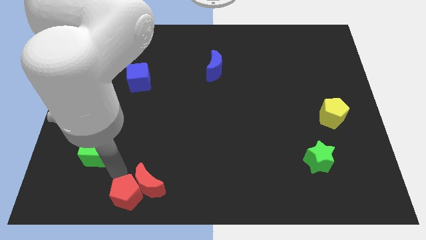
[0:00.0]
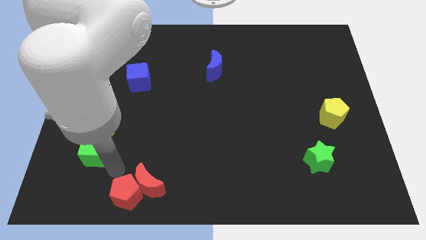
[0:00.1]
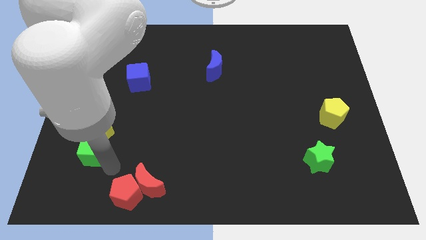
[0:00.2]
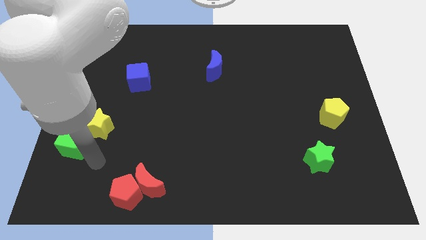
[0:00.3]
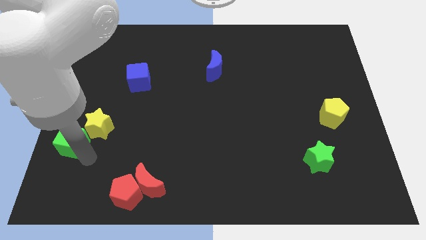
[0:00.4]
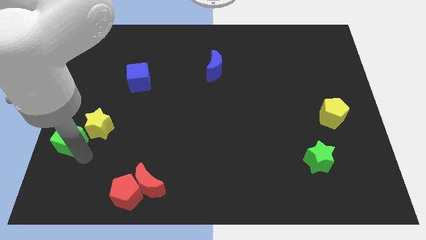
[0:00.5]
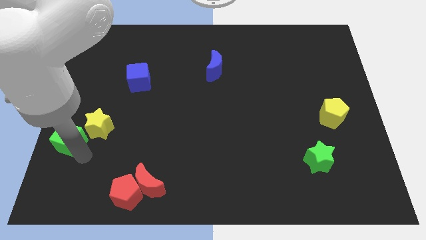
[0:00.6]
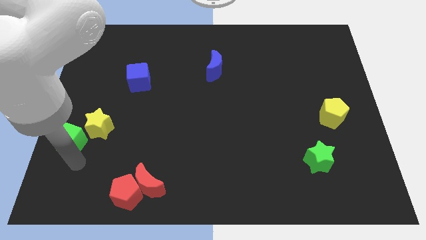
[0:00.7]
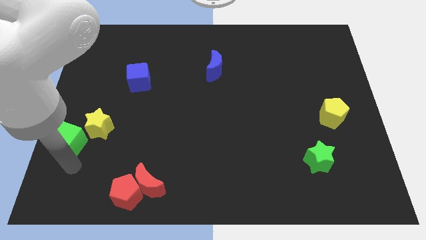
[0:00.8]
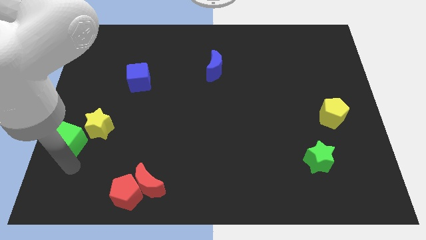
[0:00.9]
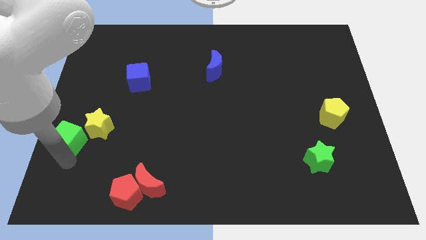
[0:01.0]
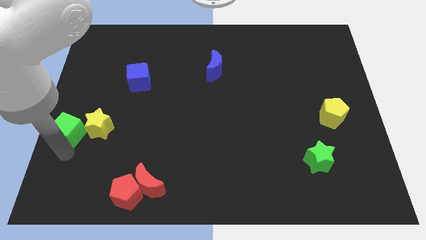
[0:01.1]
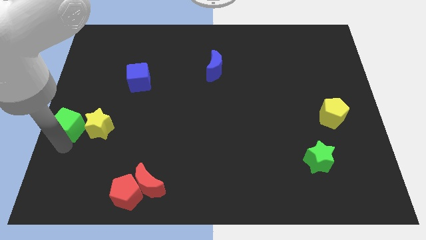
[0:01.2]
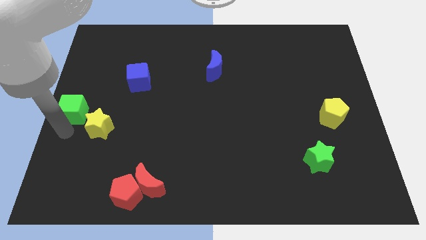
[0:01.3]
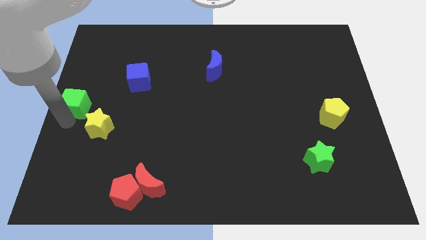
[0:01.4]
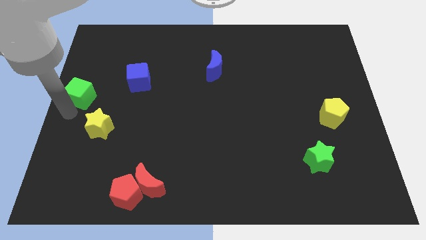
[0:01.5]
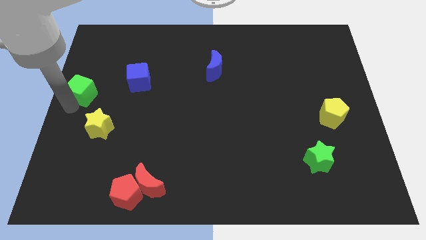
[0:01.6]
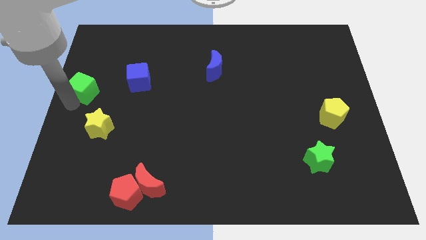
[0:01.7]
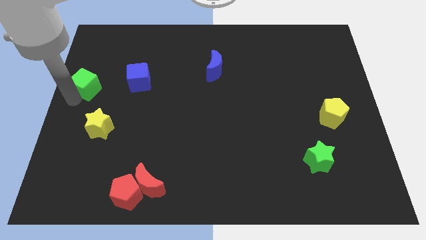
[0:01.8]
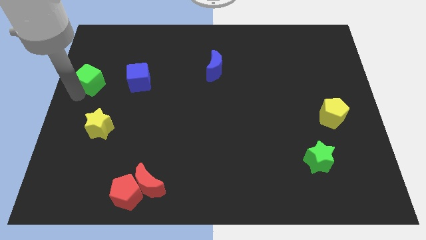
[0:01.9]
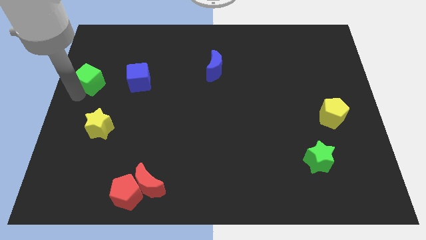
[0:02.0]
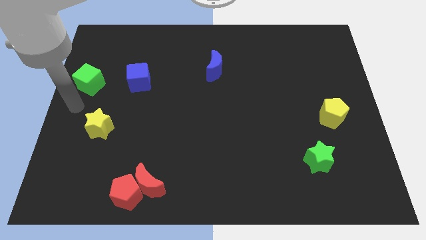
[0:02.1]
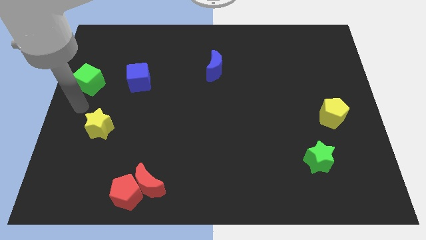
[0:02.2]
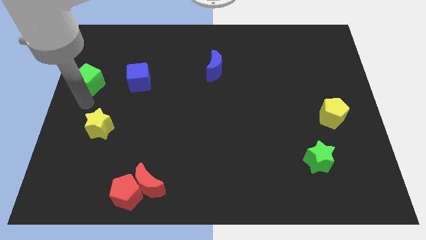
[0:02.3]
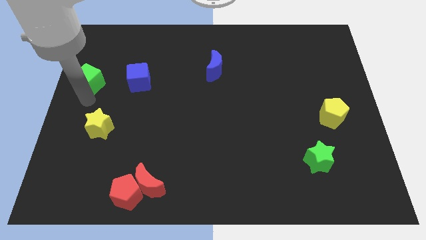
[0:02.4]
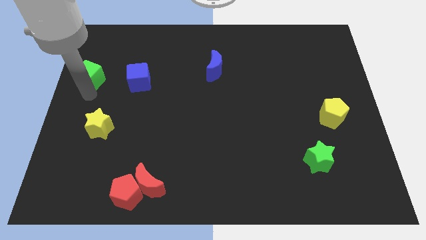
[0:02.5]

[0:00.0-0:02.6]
place green cube parallel left to blue cube

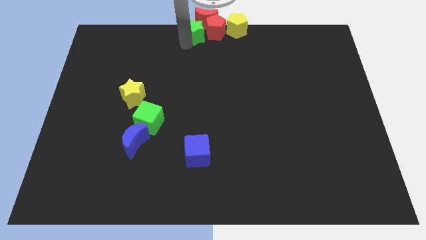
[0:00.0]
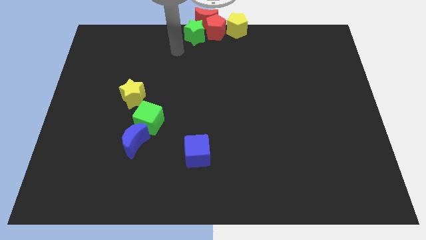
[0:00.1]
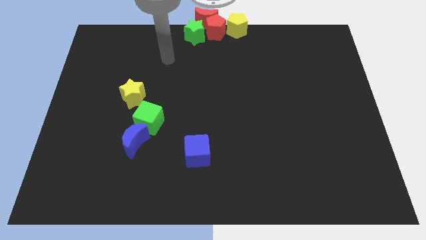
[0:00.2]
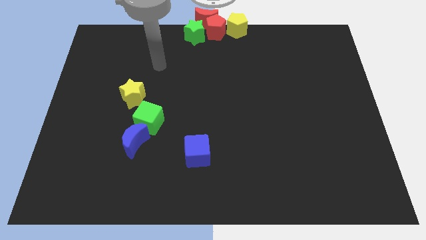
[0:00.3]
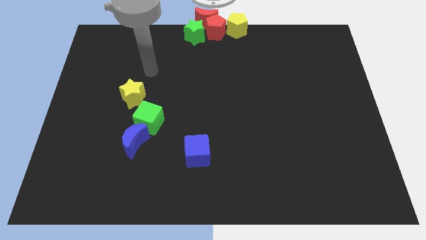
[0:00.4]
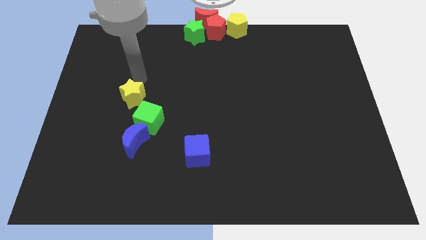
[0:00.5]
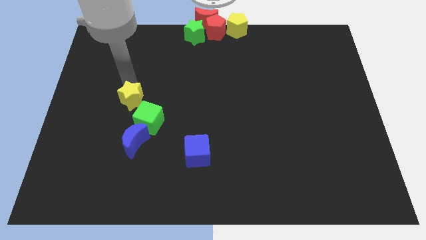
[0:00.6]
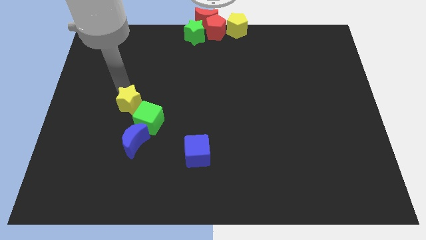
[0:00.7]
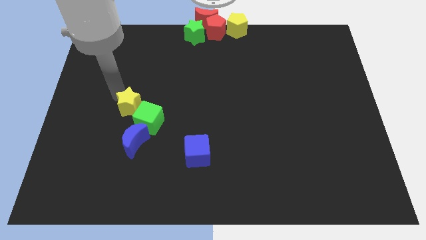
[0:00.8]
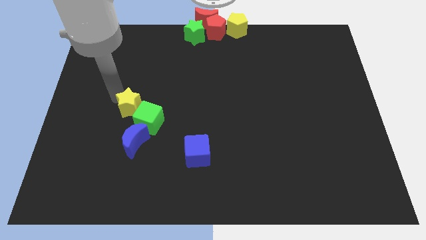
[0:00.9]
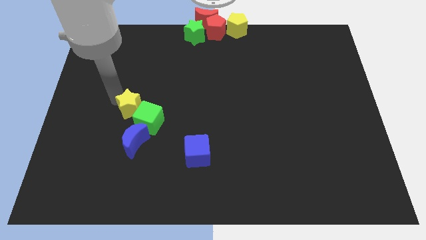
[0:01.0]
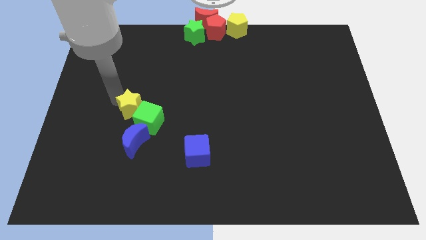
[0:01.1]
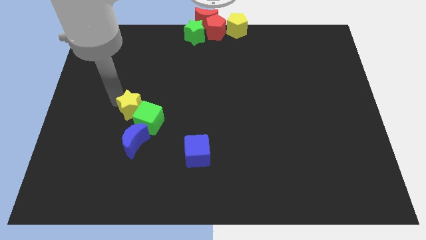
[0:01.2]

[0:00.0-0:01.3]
move yellow star slightly down

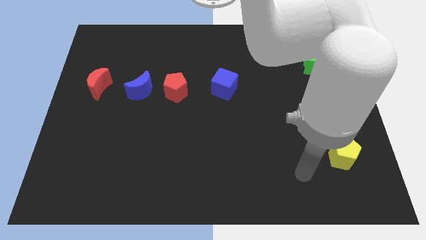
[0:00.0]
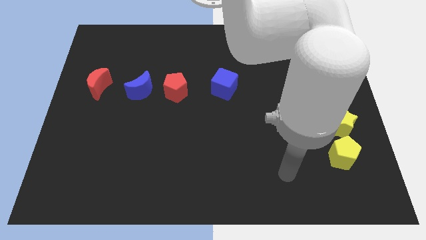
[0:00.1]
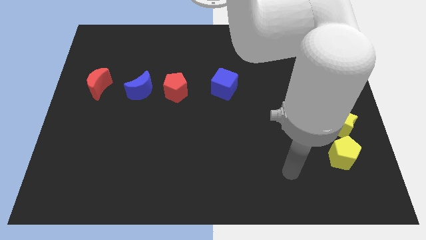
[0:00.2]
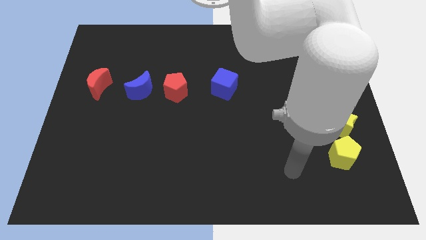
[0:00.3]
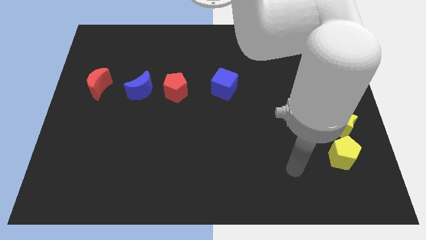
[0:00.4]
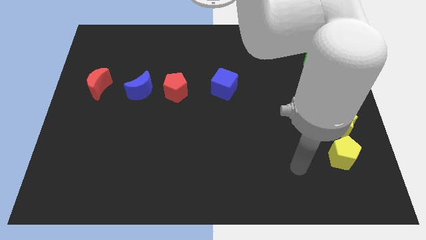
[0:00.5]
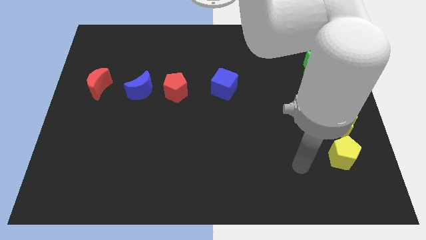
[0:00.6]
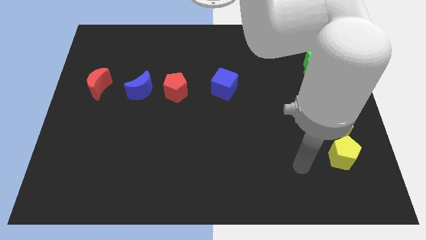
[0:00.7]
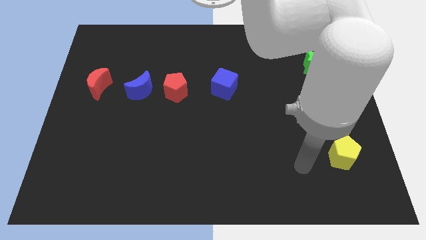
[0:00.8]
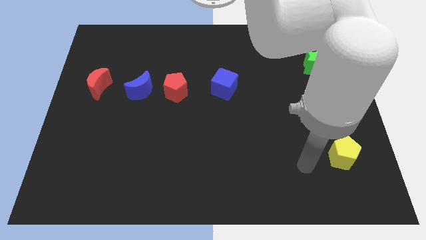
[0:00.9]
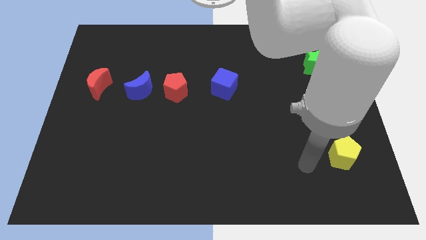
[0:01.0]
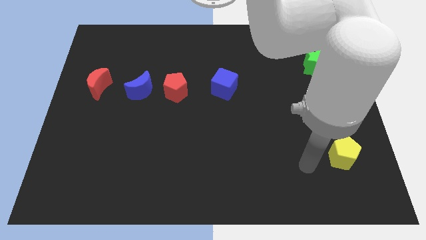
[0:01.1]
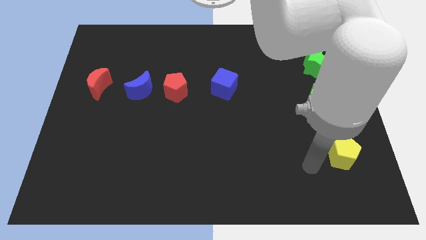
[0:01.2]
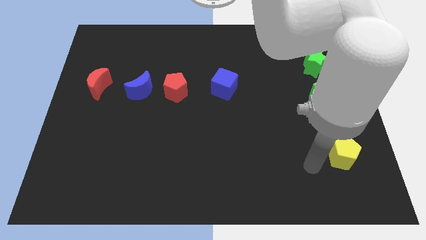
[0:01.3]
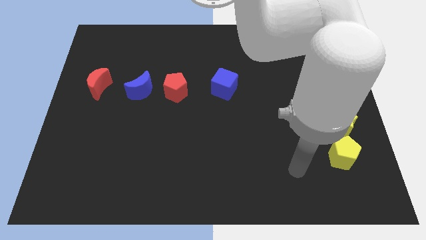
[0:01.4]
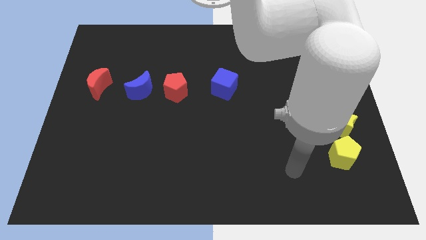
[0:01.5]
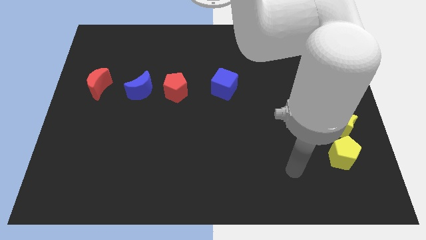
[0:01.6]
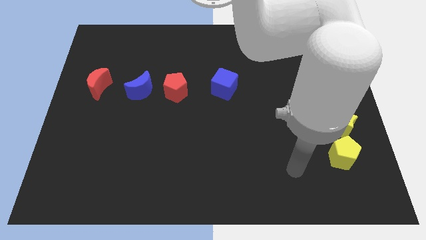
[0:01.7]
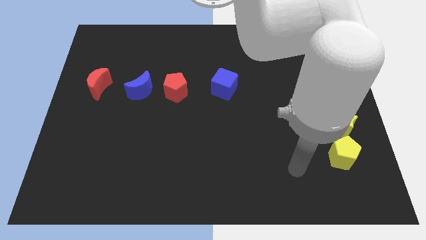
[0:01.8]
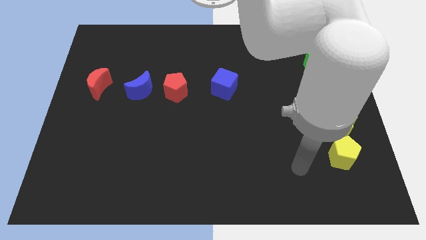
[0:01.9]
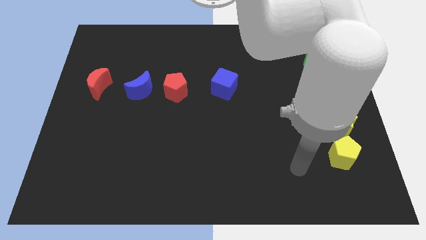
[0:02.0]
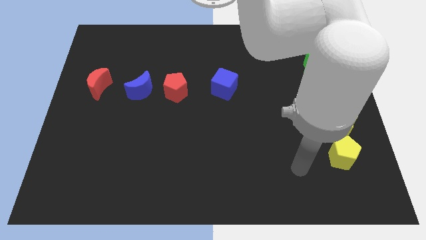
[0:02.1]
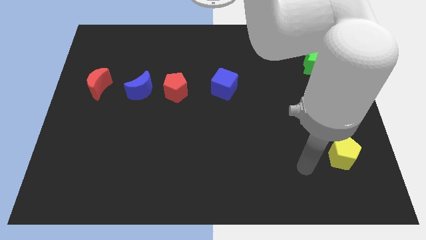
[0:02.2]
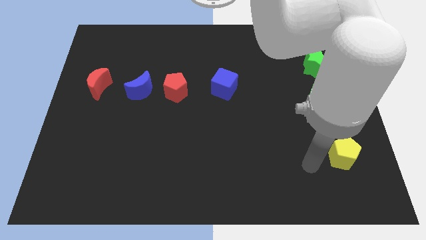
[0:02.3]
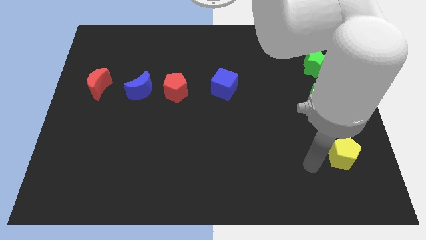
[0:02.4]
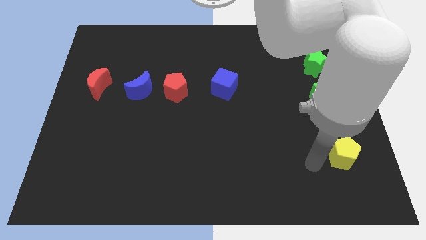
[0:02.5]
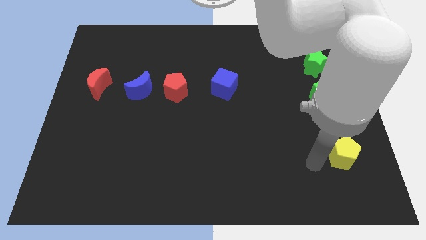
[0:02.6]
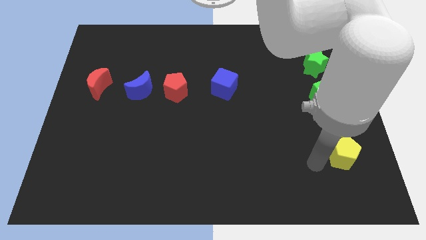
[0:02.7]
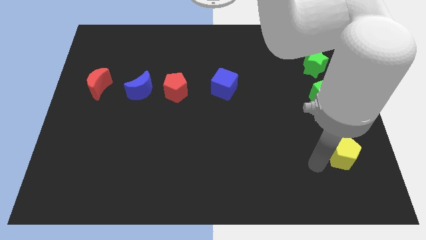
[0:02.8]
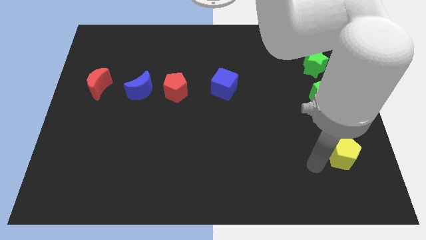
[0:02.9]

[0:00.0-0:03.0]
place your arm to the left of the yellow pentagon

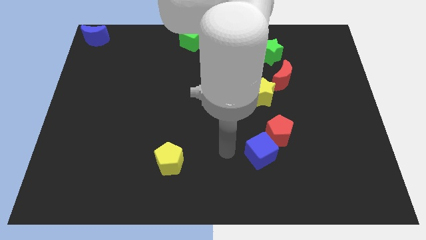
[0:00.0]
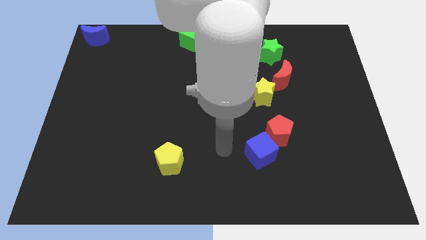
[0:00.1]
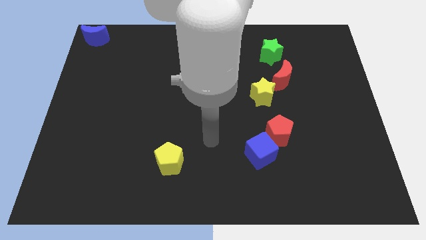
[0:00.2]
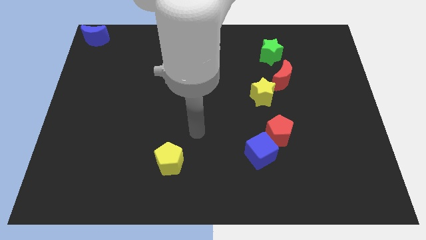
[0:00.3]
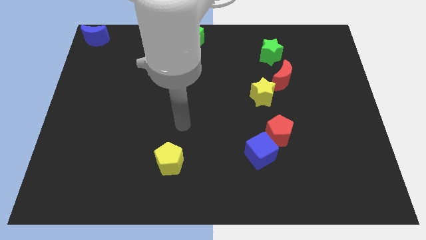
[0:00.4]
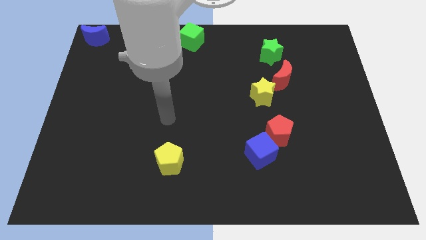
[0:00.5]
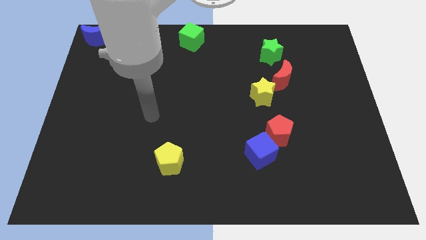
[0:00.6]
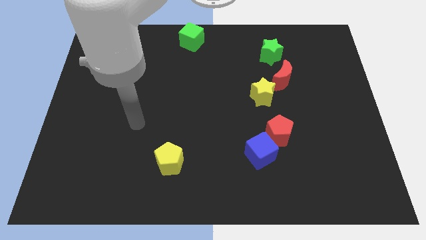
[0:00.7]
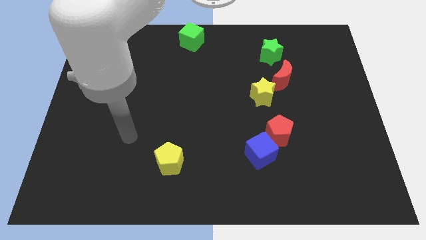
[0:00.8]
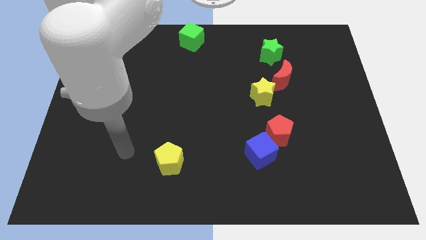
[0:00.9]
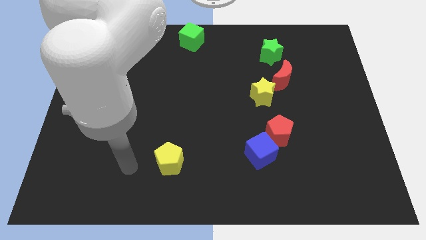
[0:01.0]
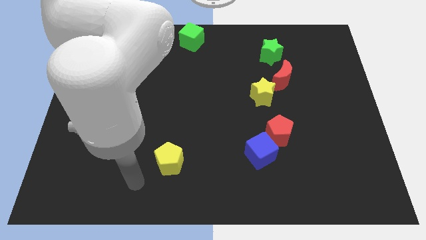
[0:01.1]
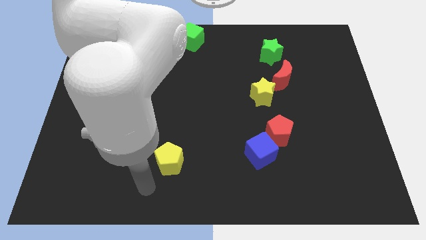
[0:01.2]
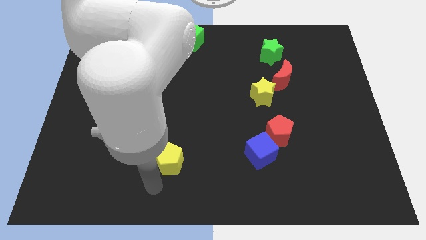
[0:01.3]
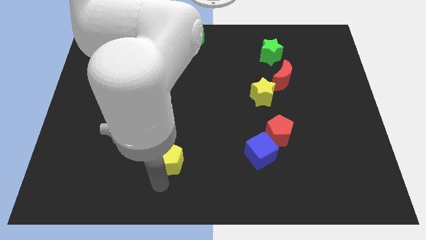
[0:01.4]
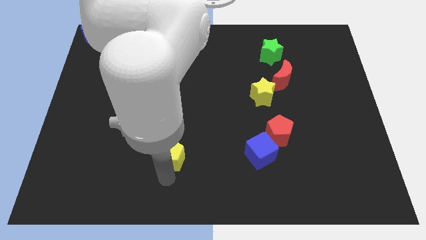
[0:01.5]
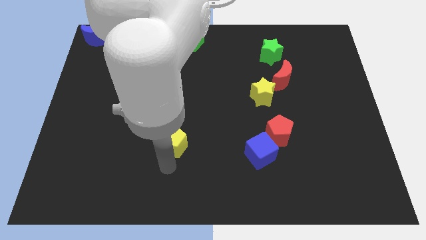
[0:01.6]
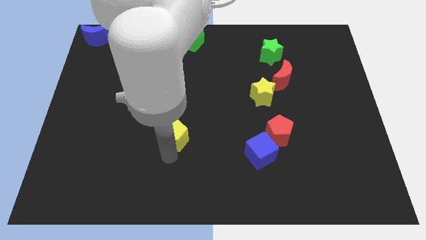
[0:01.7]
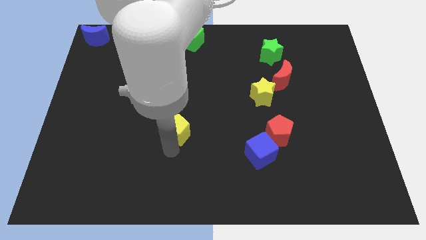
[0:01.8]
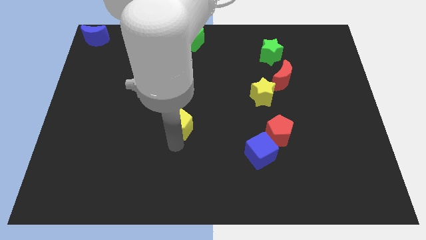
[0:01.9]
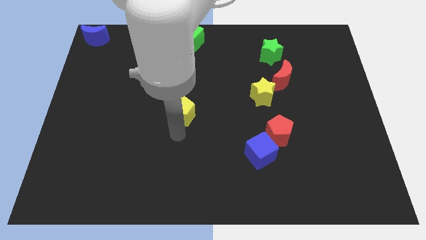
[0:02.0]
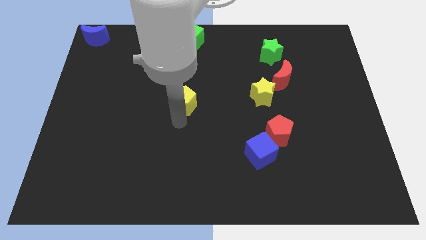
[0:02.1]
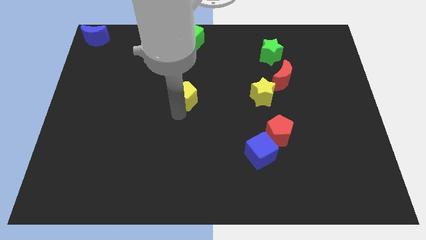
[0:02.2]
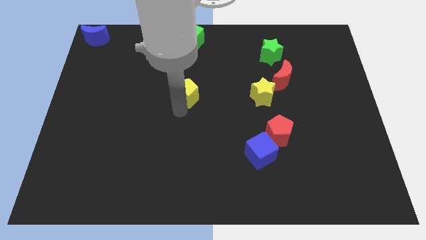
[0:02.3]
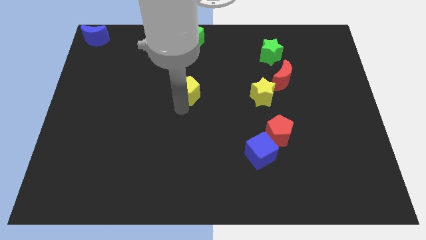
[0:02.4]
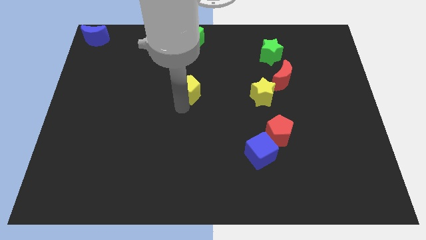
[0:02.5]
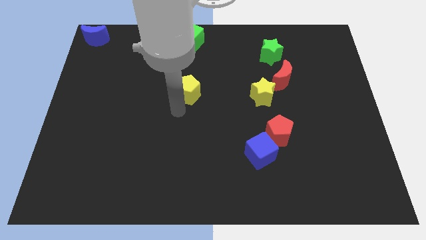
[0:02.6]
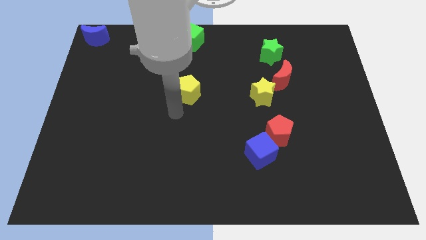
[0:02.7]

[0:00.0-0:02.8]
push the yellow pentagon to the left of the yellow star
